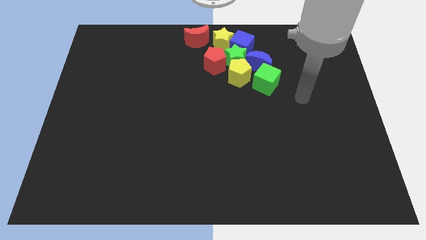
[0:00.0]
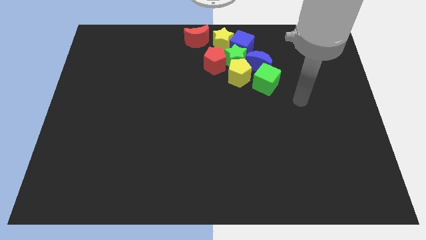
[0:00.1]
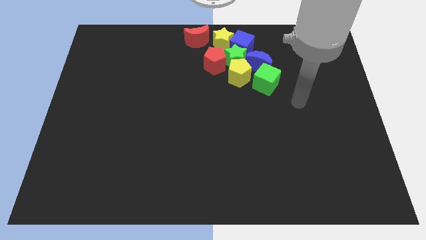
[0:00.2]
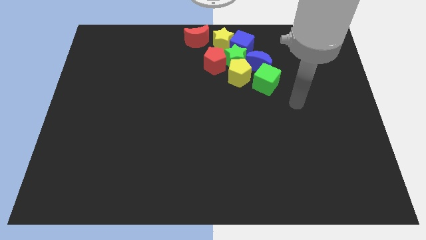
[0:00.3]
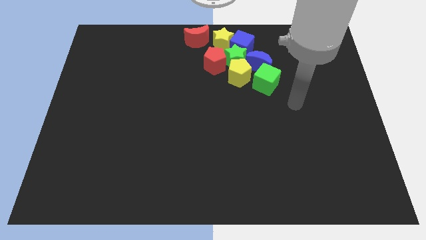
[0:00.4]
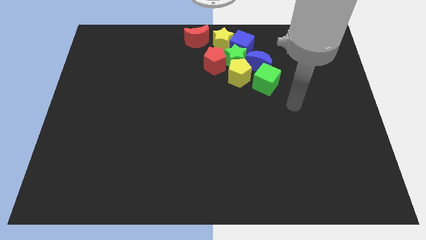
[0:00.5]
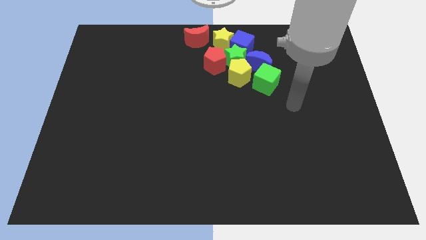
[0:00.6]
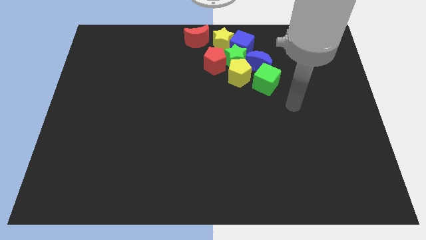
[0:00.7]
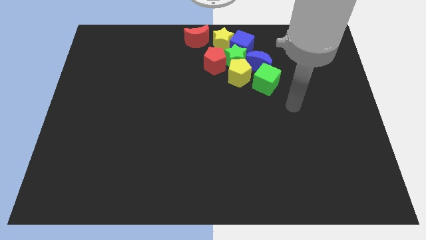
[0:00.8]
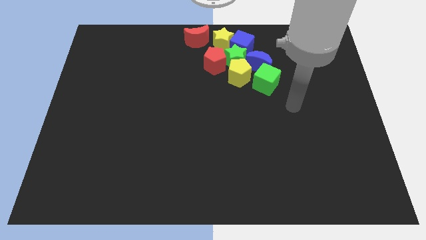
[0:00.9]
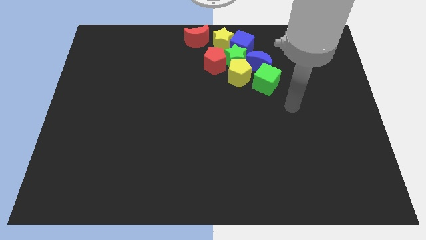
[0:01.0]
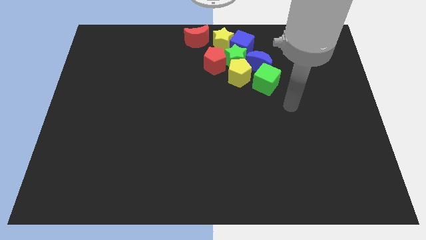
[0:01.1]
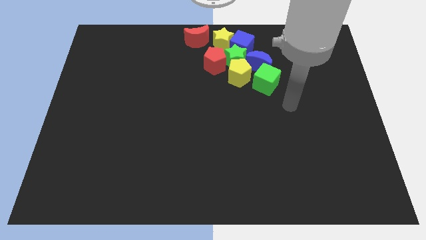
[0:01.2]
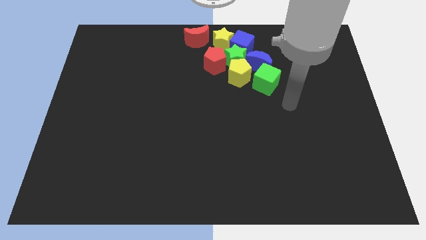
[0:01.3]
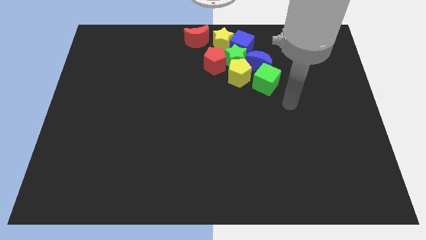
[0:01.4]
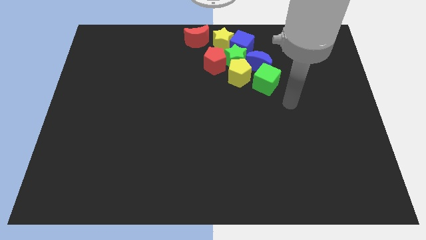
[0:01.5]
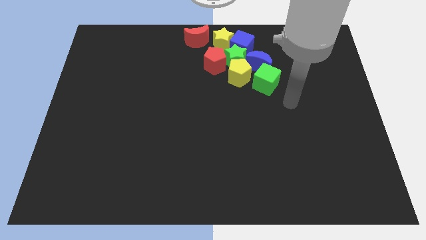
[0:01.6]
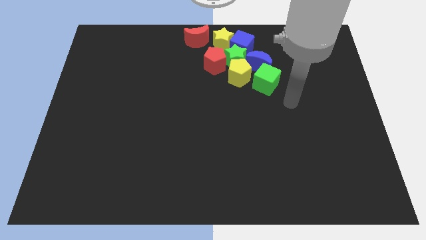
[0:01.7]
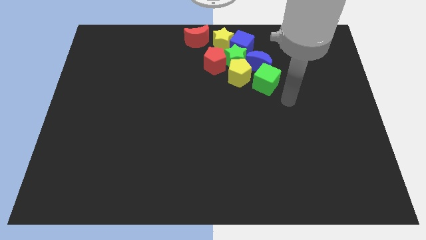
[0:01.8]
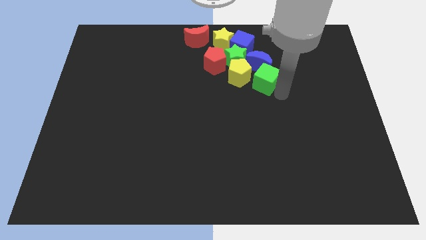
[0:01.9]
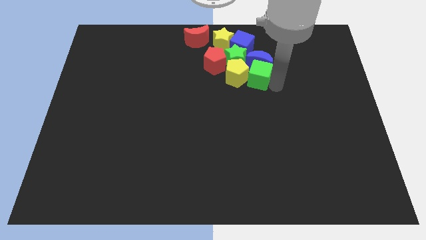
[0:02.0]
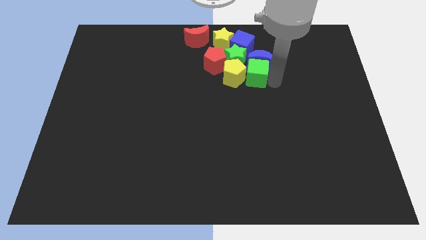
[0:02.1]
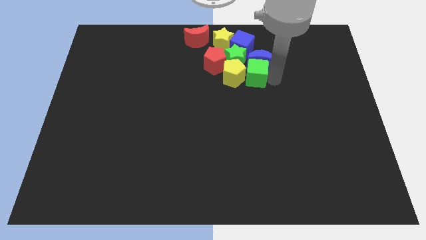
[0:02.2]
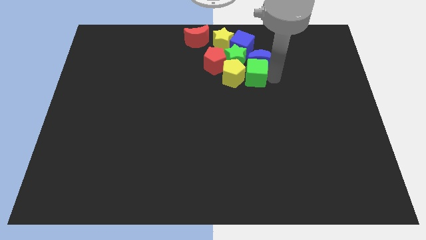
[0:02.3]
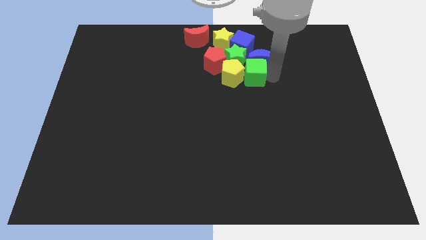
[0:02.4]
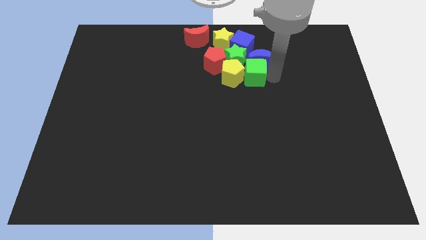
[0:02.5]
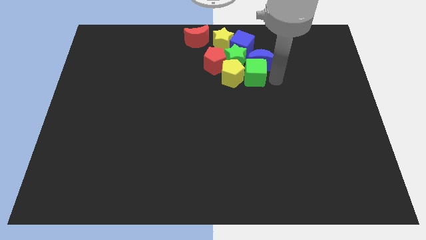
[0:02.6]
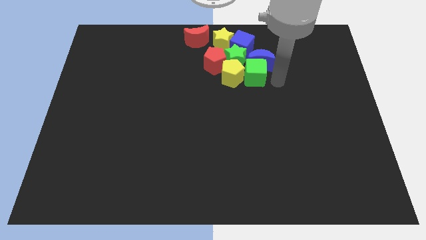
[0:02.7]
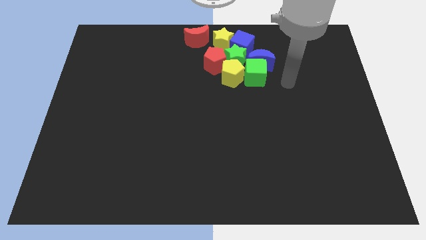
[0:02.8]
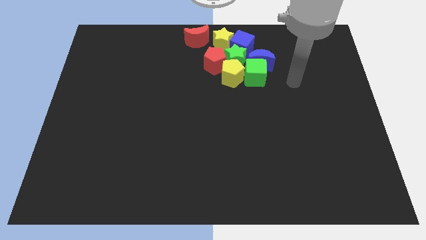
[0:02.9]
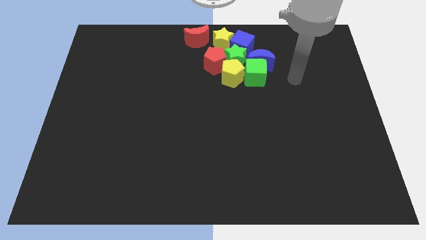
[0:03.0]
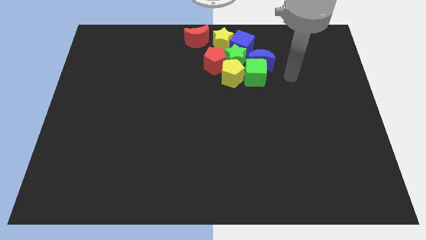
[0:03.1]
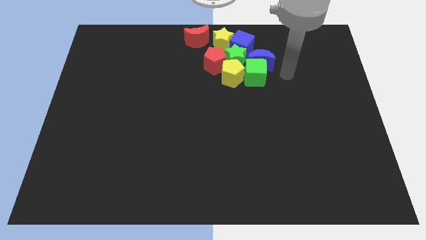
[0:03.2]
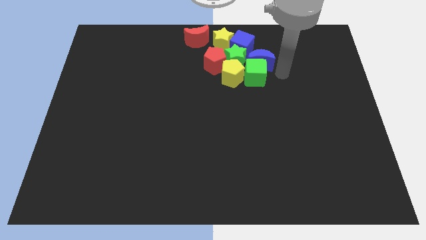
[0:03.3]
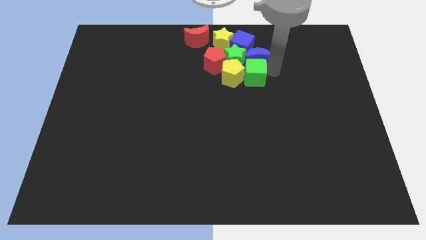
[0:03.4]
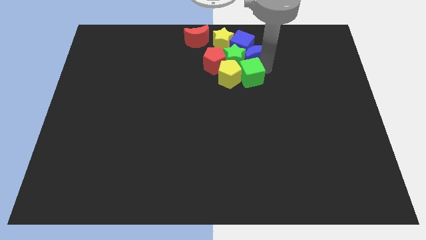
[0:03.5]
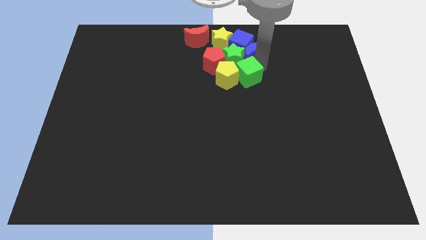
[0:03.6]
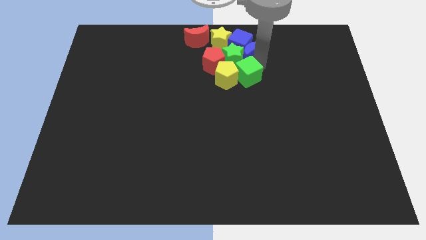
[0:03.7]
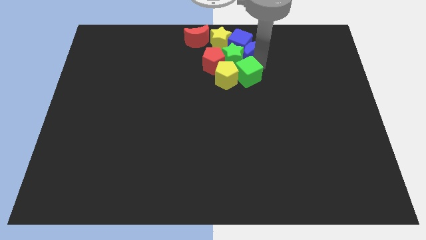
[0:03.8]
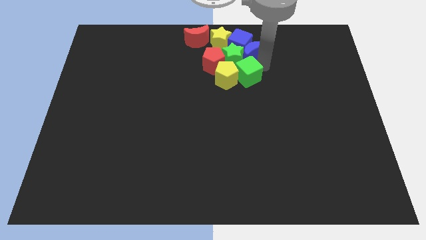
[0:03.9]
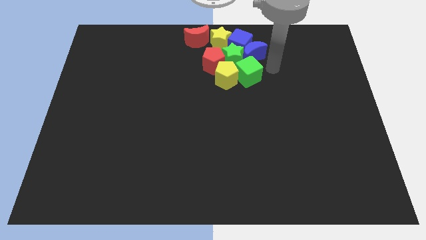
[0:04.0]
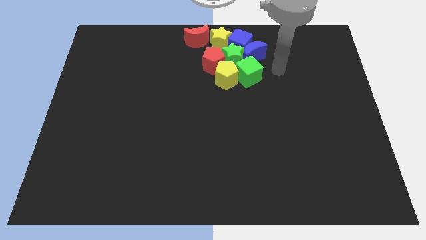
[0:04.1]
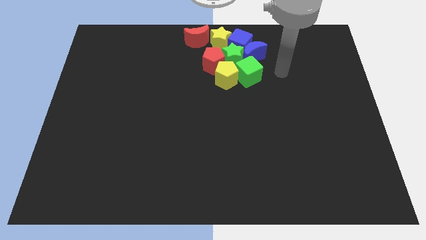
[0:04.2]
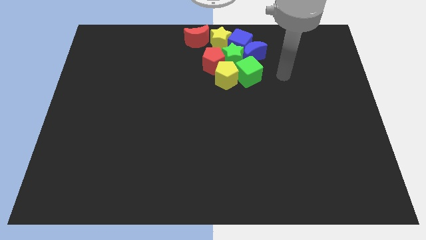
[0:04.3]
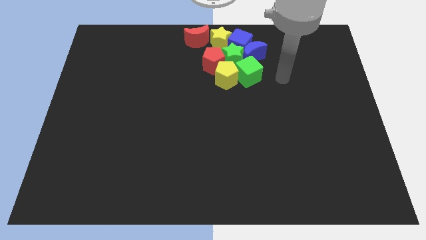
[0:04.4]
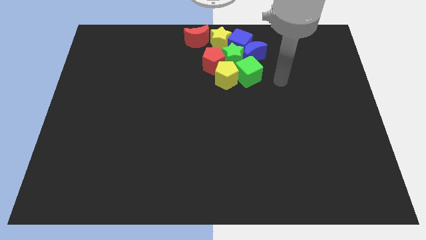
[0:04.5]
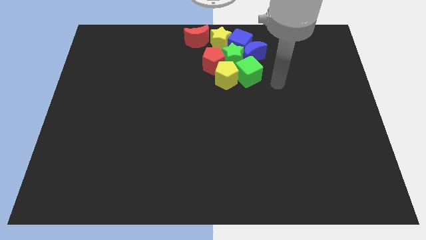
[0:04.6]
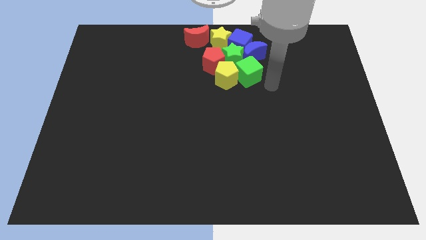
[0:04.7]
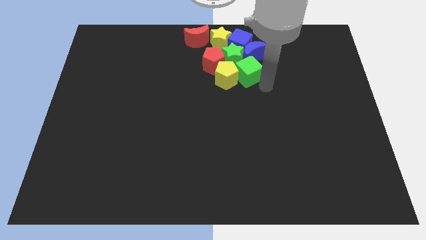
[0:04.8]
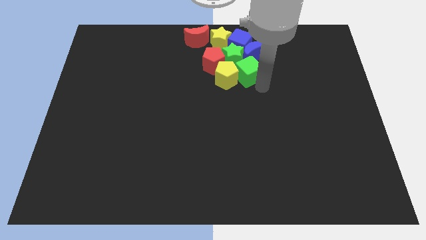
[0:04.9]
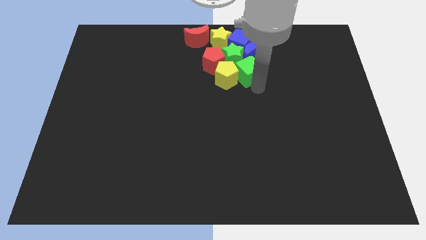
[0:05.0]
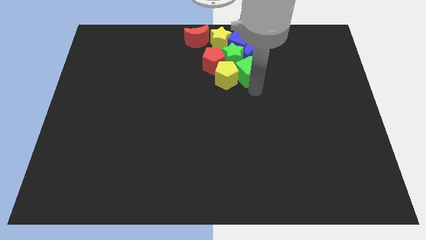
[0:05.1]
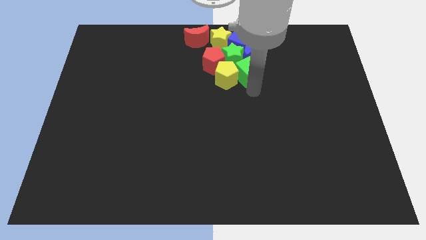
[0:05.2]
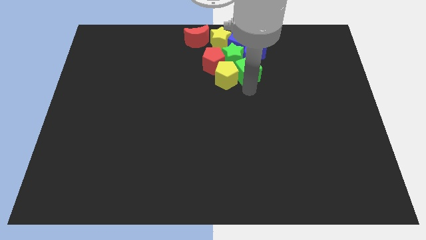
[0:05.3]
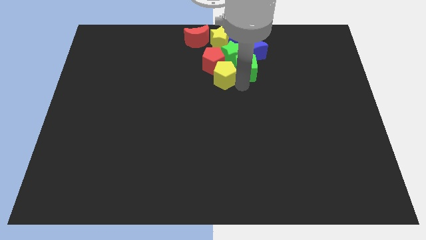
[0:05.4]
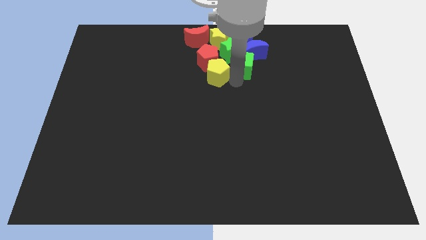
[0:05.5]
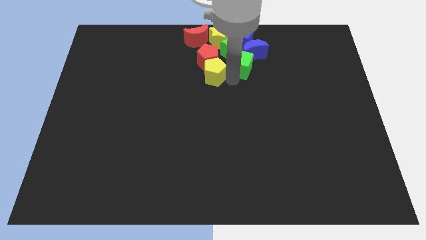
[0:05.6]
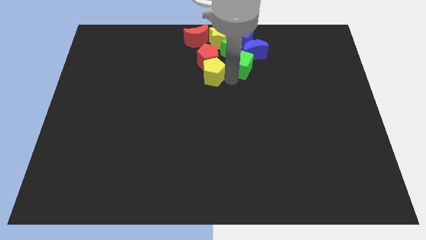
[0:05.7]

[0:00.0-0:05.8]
place your arm in between the yellow pentagon and the green cube

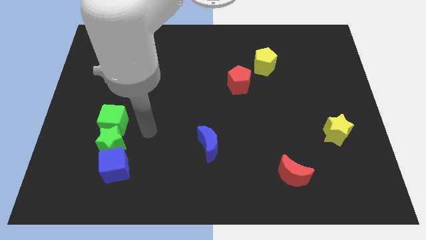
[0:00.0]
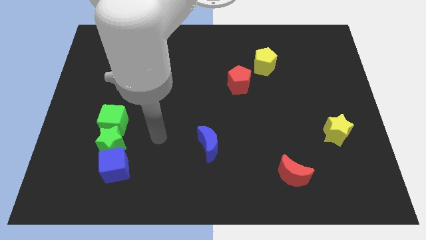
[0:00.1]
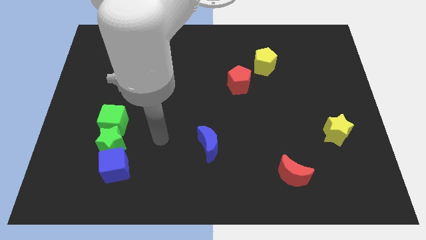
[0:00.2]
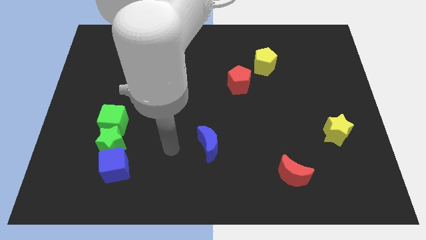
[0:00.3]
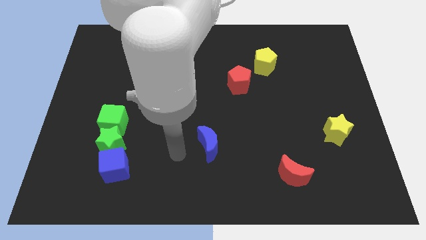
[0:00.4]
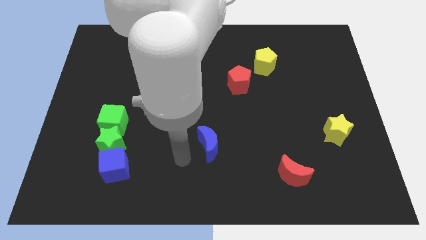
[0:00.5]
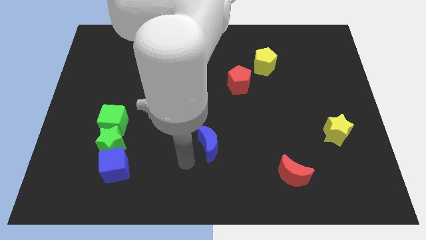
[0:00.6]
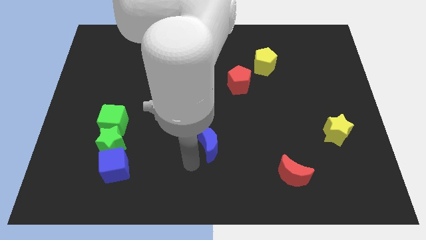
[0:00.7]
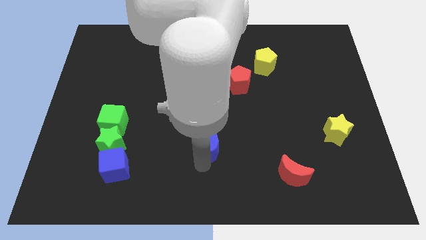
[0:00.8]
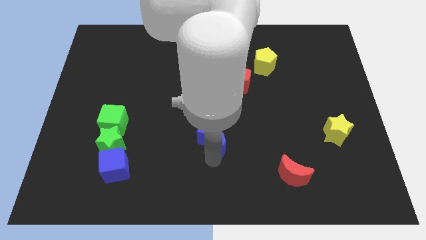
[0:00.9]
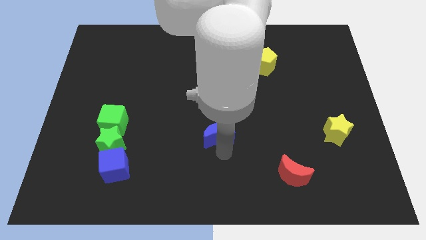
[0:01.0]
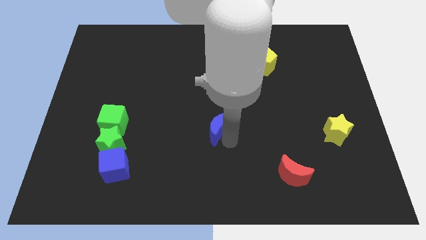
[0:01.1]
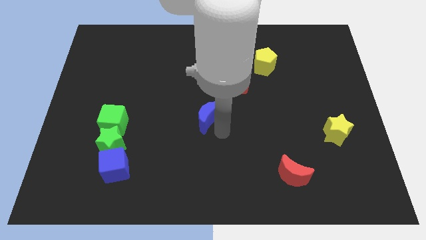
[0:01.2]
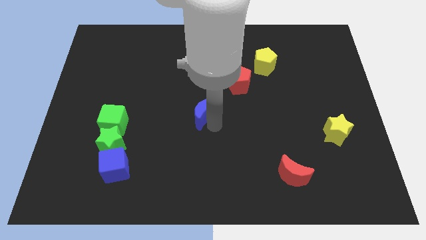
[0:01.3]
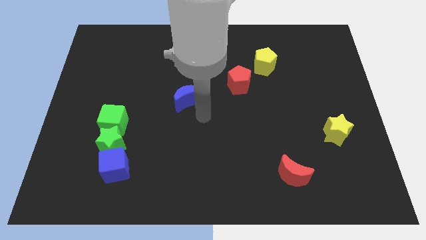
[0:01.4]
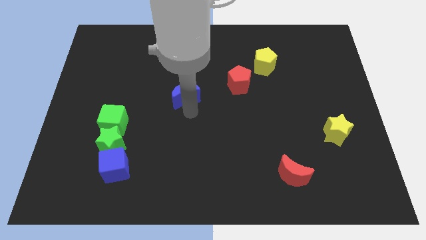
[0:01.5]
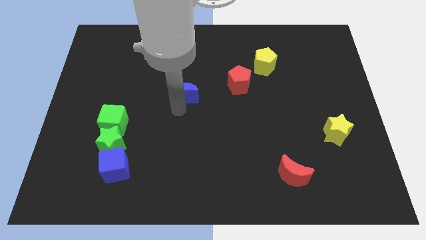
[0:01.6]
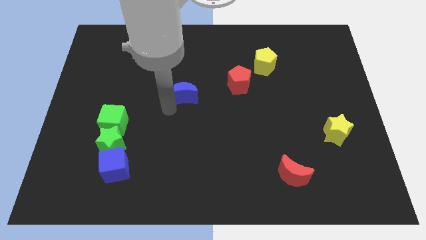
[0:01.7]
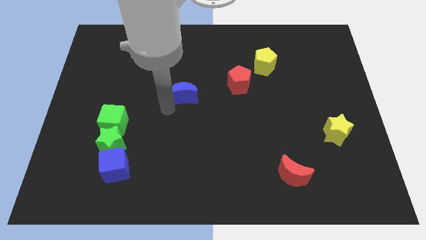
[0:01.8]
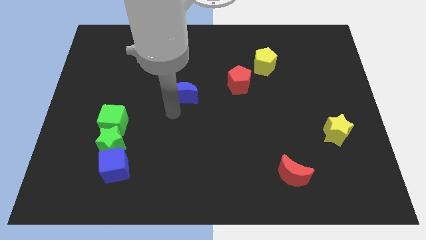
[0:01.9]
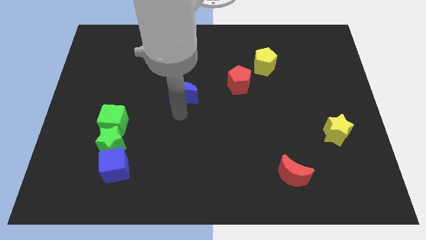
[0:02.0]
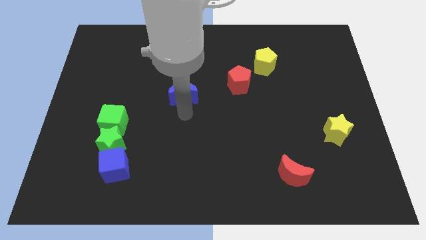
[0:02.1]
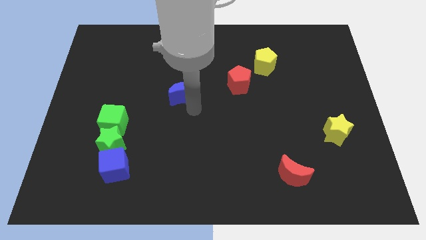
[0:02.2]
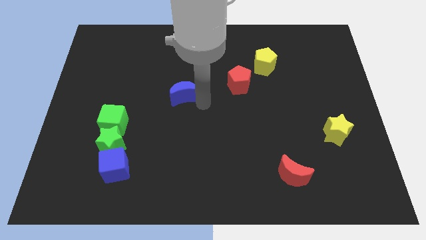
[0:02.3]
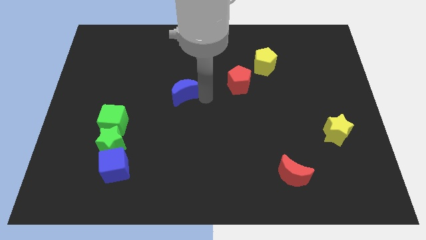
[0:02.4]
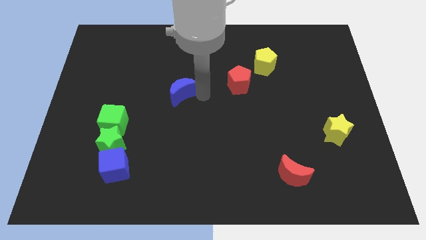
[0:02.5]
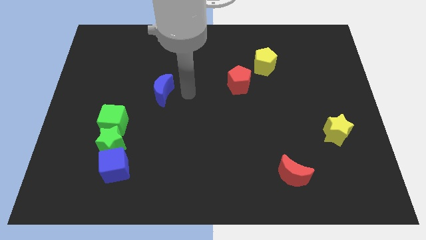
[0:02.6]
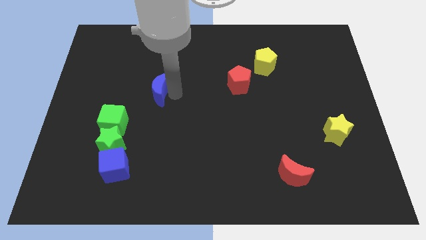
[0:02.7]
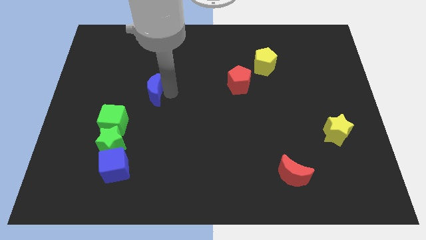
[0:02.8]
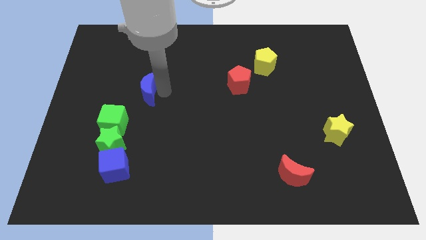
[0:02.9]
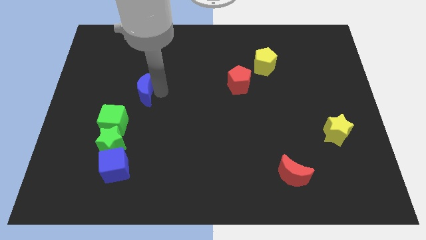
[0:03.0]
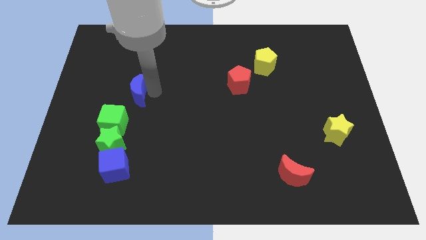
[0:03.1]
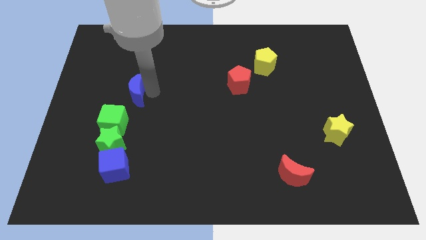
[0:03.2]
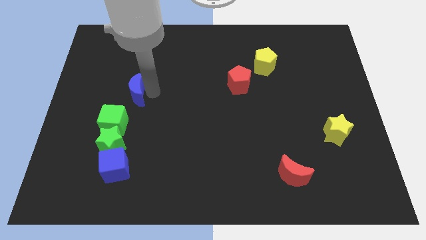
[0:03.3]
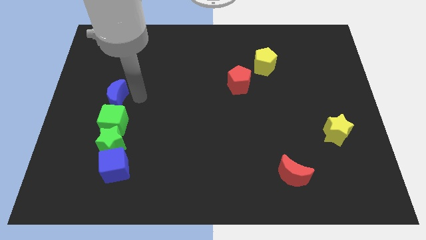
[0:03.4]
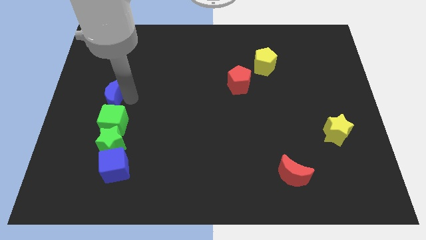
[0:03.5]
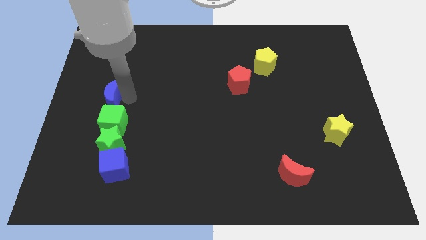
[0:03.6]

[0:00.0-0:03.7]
place the blue crescent above the green cube
